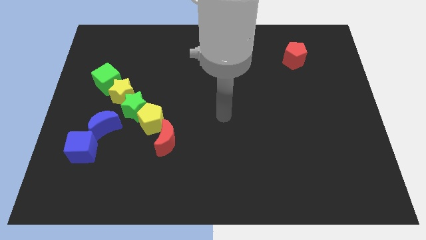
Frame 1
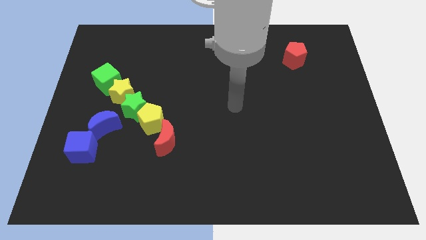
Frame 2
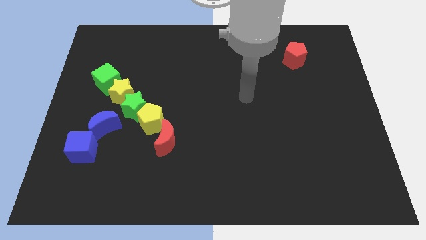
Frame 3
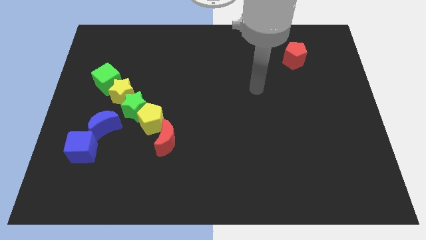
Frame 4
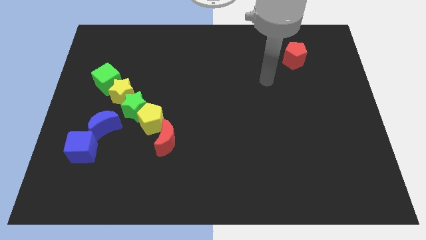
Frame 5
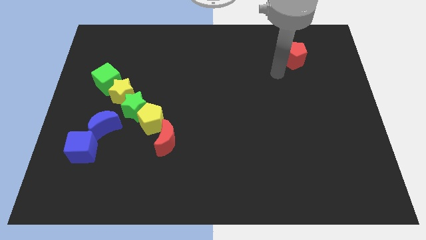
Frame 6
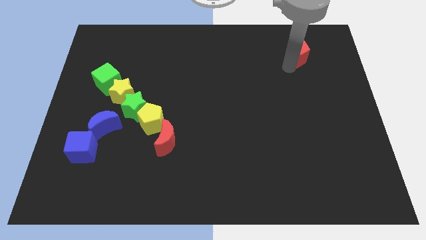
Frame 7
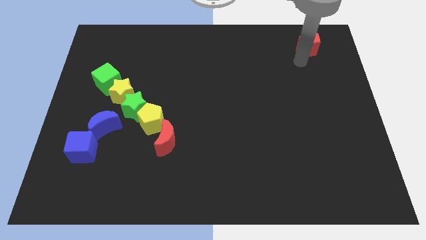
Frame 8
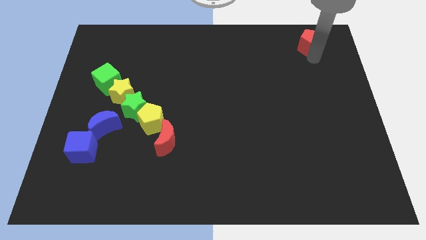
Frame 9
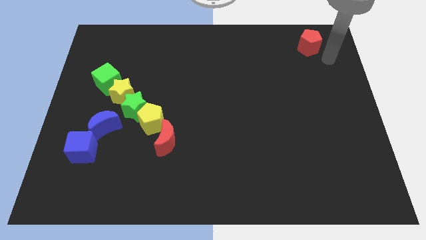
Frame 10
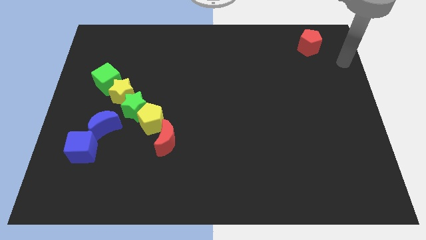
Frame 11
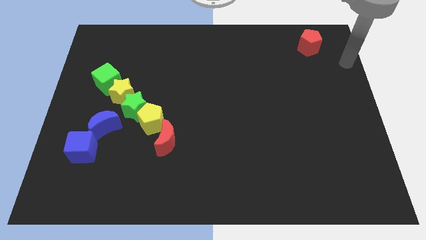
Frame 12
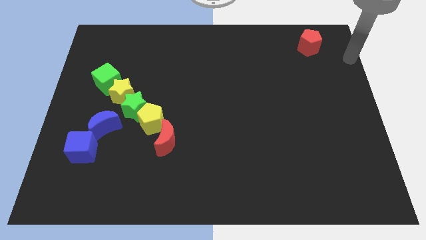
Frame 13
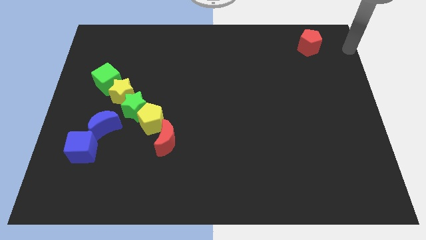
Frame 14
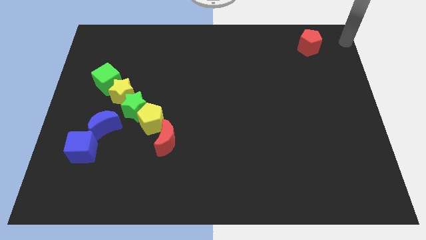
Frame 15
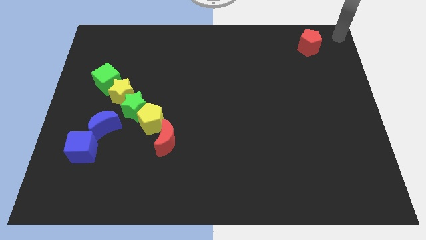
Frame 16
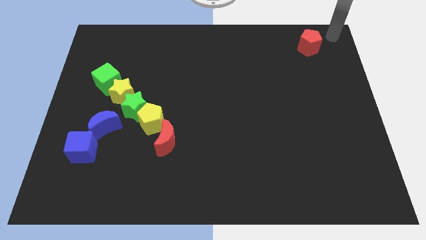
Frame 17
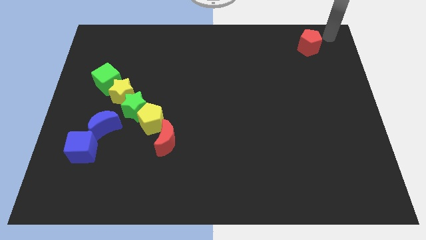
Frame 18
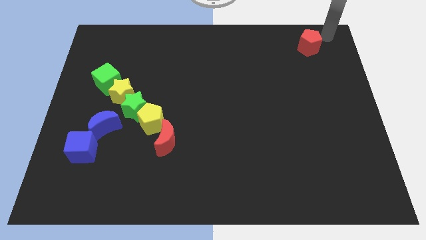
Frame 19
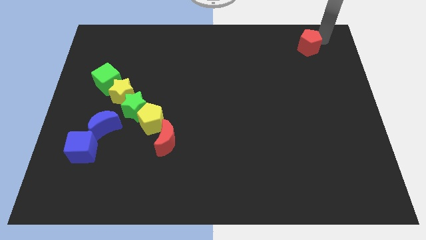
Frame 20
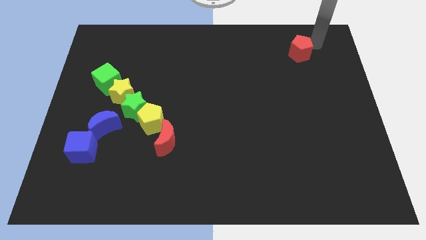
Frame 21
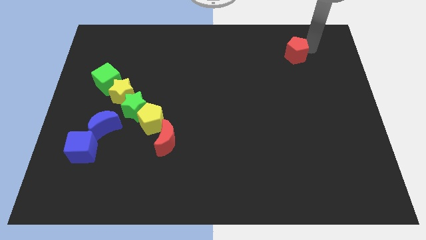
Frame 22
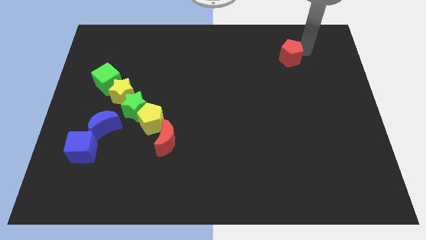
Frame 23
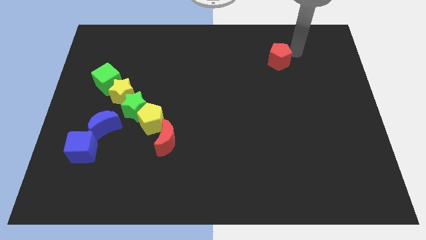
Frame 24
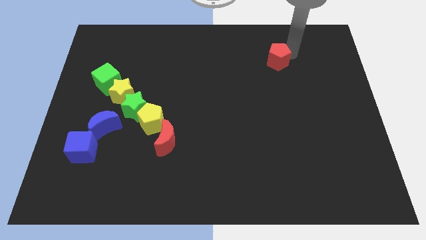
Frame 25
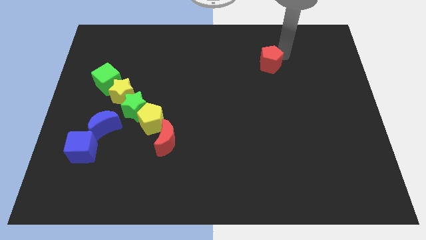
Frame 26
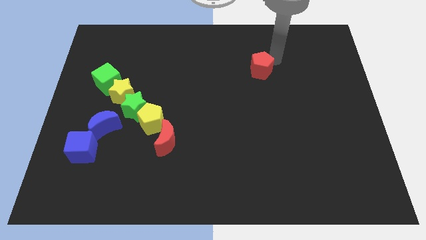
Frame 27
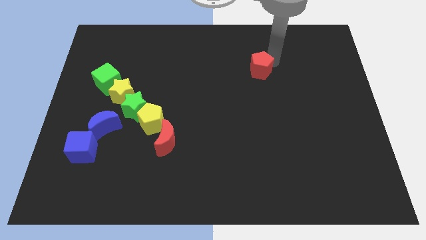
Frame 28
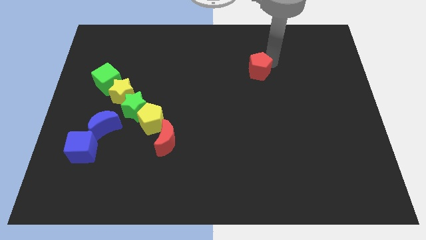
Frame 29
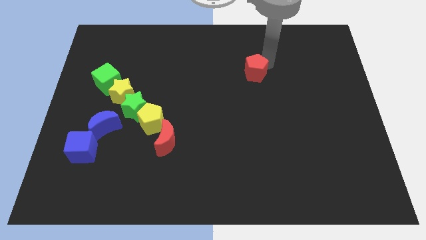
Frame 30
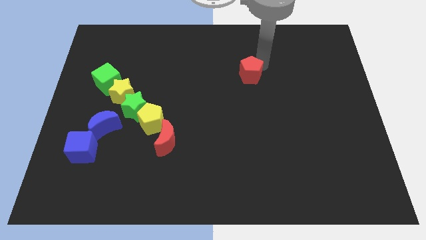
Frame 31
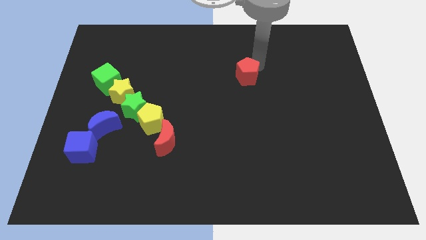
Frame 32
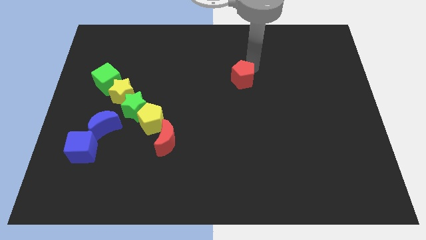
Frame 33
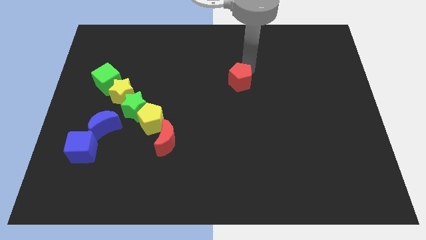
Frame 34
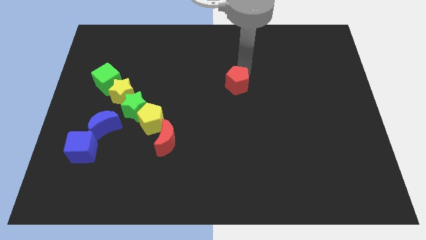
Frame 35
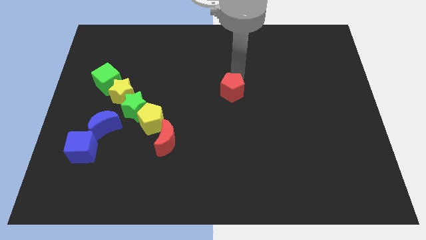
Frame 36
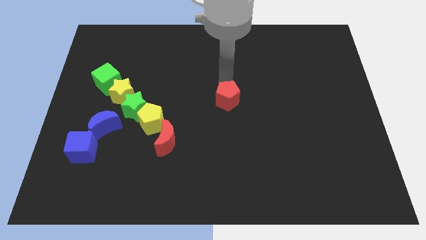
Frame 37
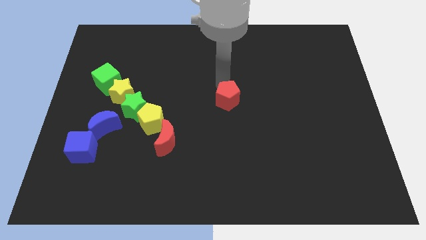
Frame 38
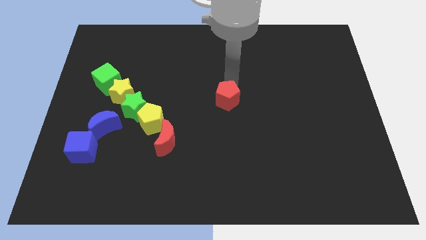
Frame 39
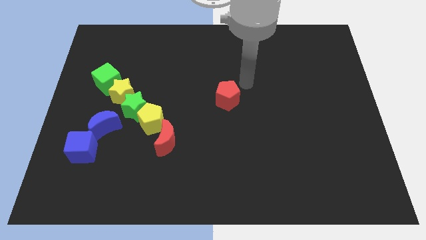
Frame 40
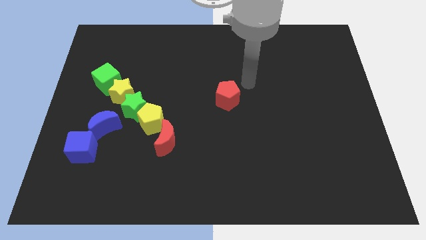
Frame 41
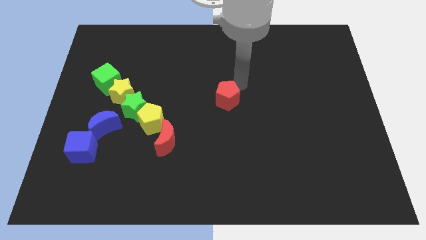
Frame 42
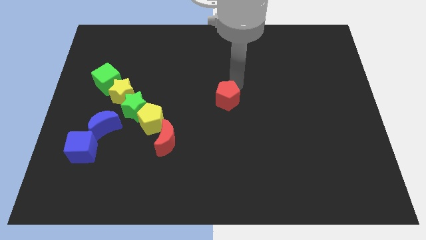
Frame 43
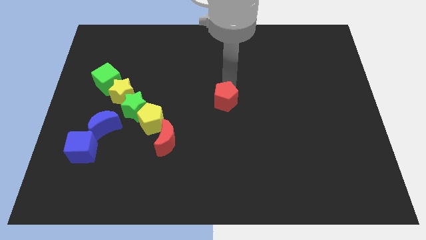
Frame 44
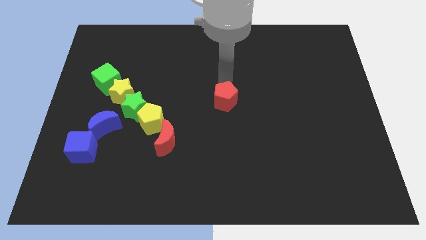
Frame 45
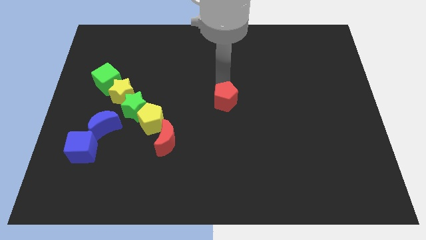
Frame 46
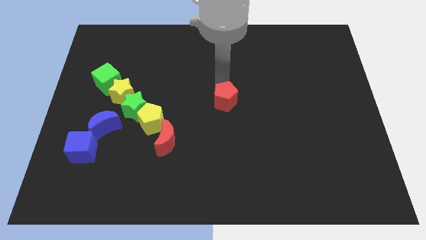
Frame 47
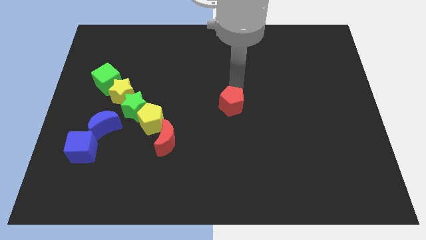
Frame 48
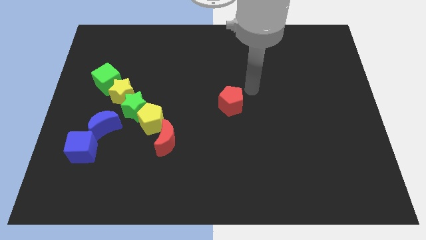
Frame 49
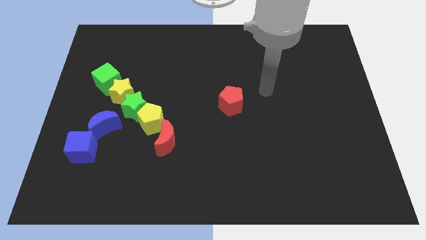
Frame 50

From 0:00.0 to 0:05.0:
place the red pentagon at the center of the board

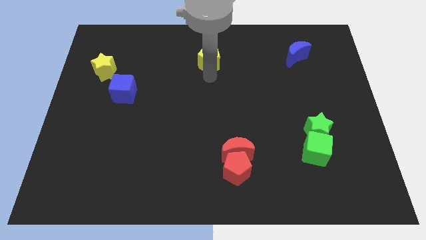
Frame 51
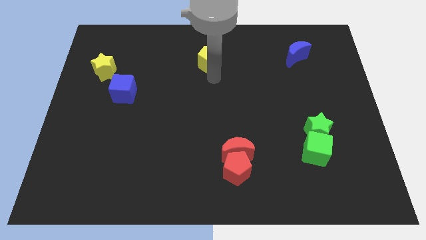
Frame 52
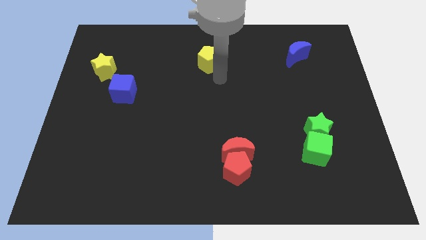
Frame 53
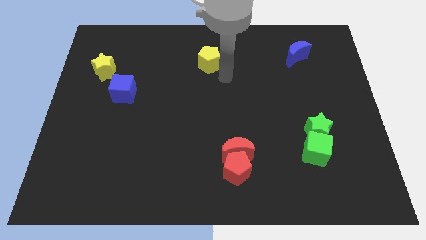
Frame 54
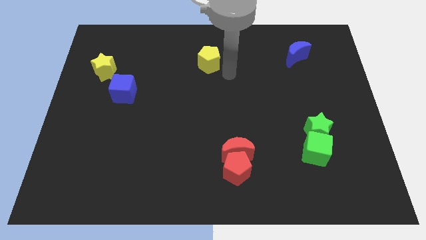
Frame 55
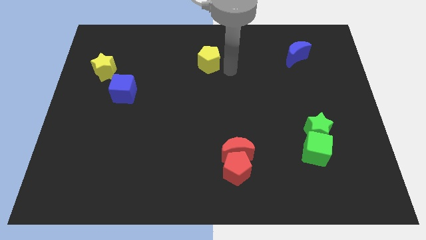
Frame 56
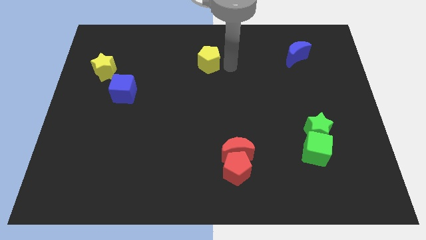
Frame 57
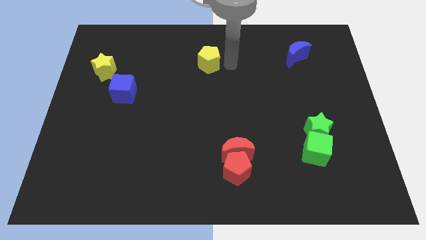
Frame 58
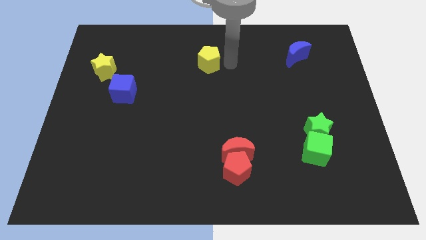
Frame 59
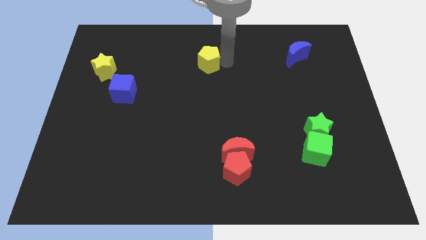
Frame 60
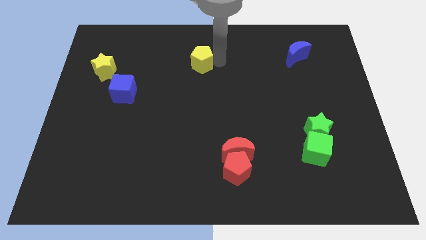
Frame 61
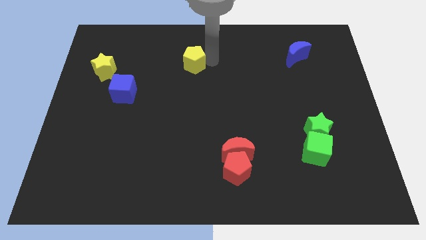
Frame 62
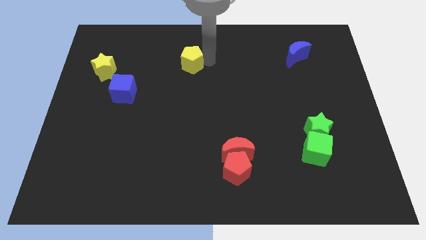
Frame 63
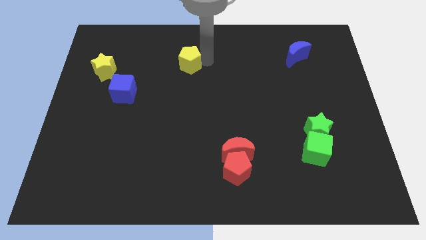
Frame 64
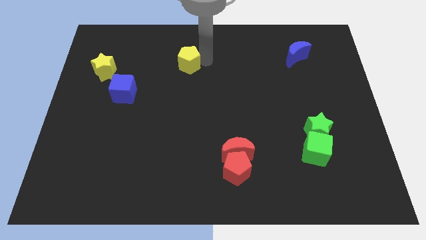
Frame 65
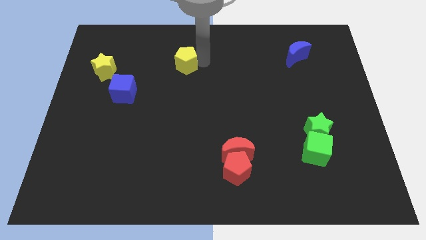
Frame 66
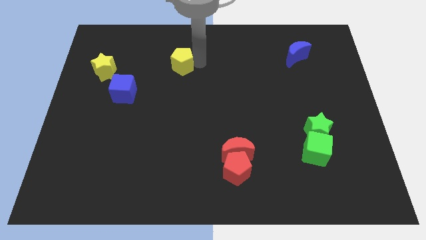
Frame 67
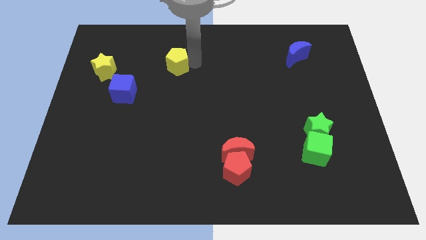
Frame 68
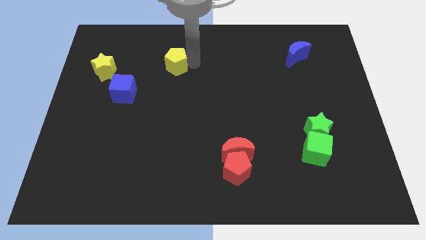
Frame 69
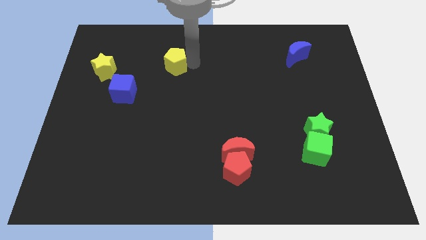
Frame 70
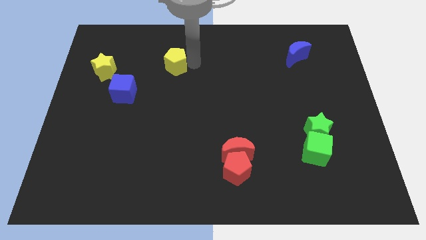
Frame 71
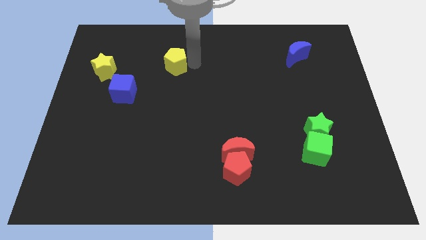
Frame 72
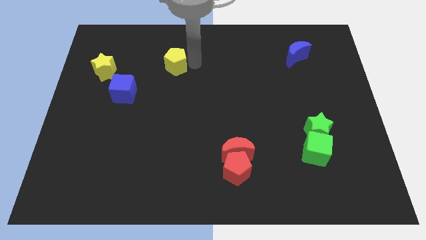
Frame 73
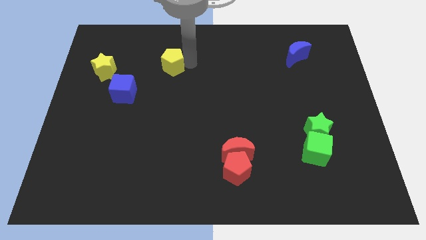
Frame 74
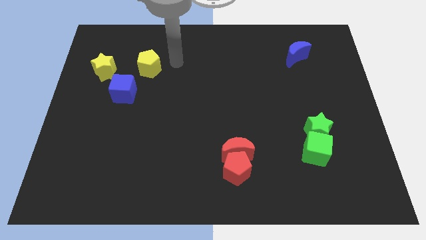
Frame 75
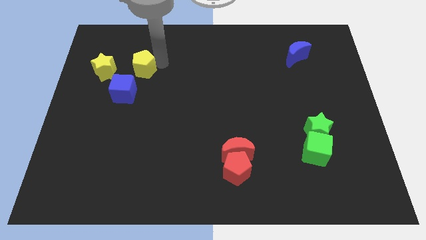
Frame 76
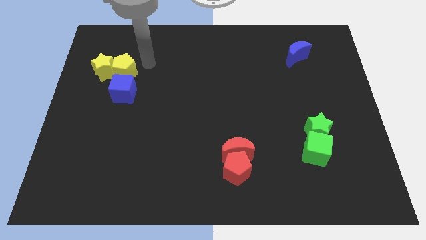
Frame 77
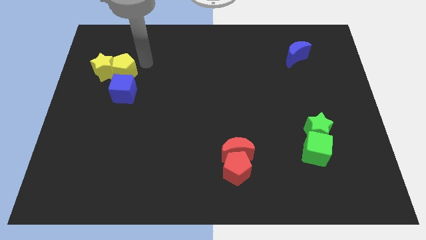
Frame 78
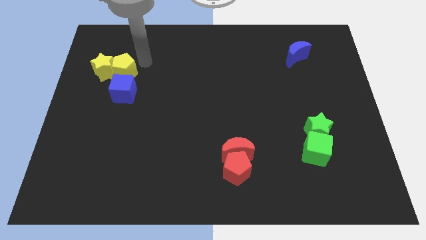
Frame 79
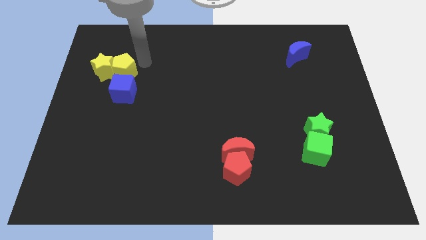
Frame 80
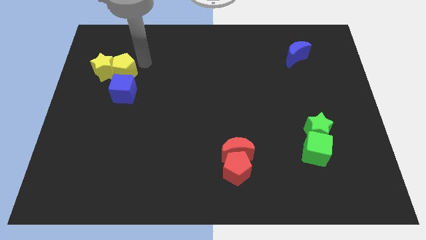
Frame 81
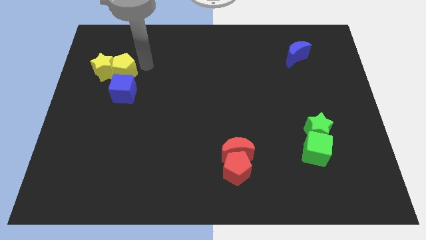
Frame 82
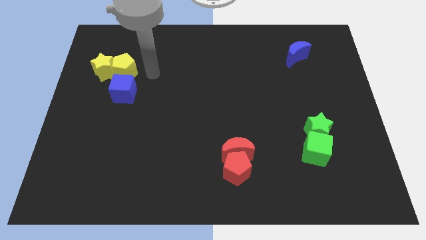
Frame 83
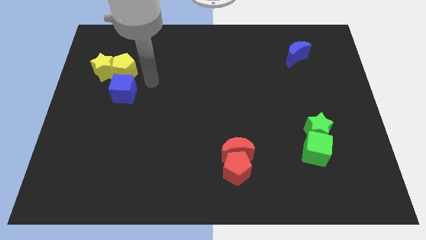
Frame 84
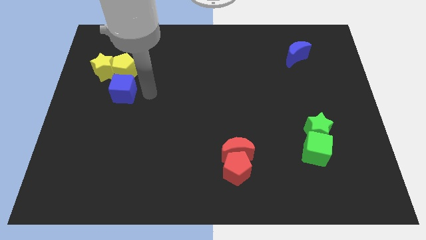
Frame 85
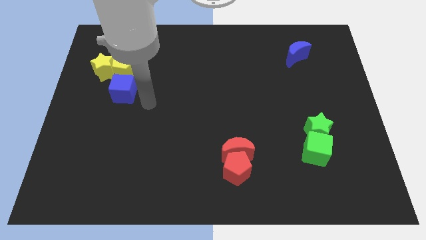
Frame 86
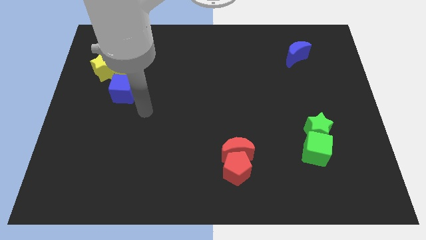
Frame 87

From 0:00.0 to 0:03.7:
push the yellow pentagon close to the yellow star

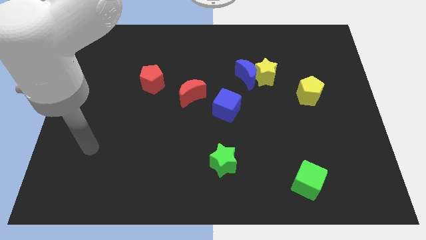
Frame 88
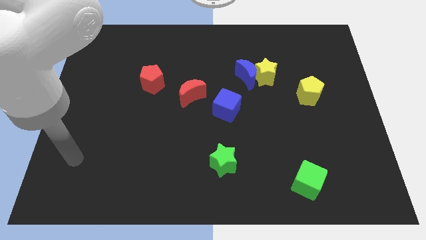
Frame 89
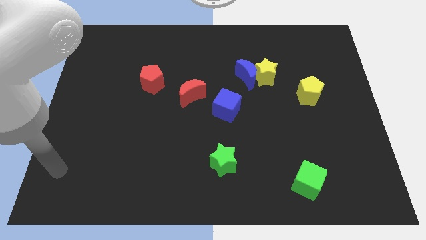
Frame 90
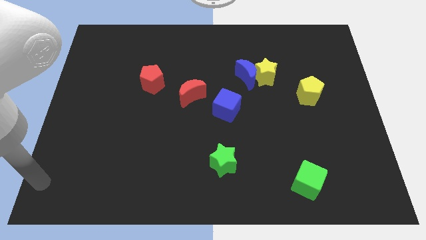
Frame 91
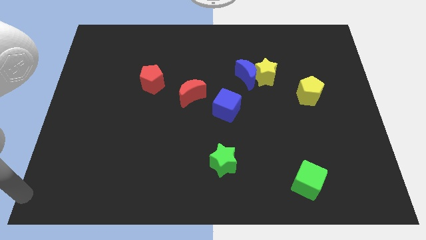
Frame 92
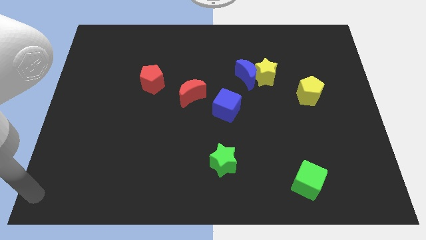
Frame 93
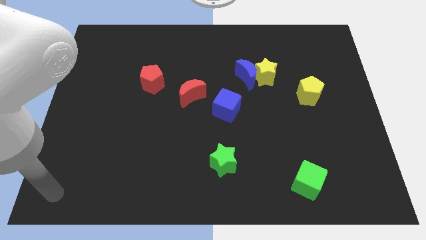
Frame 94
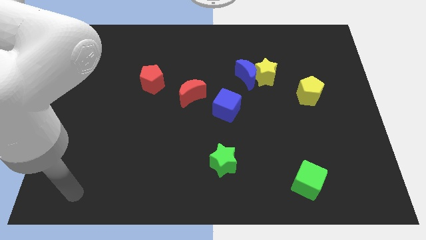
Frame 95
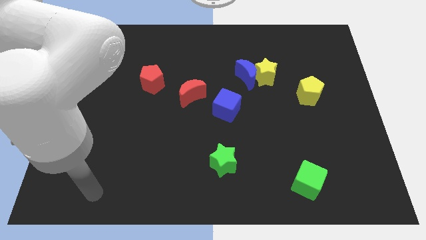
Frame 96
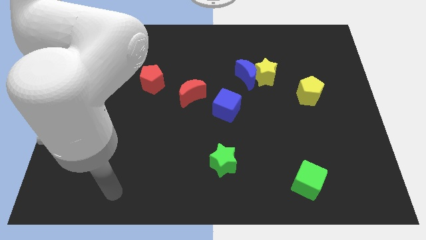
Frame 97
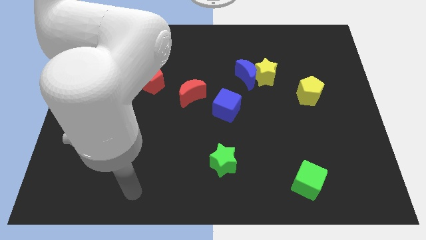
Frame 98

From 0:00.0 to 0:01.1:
drag the arm towards the bottom of the board
